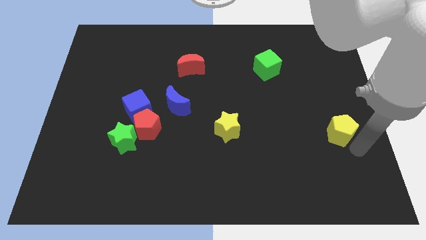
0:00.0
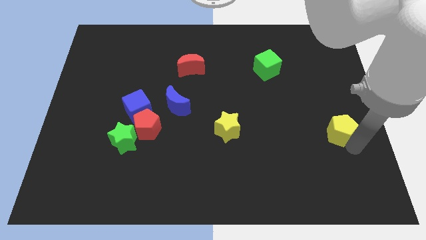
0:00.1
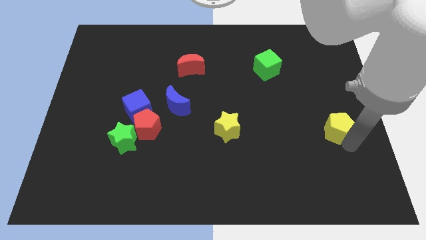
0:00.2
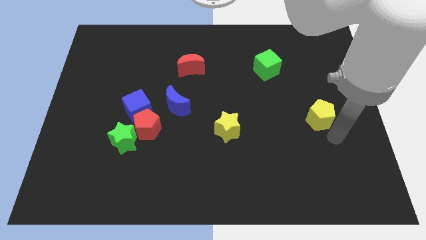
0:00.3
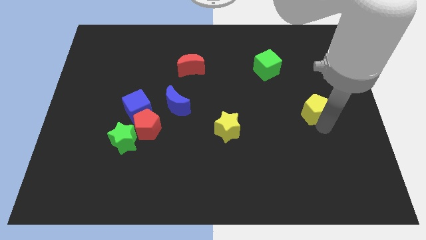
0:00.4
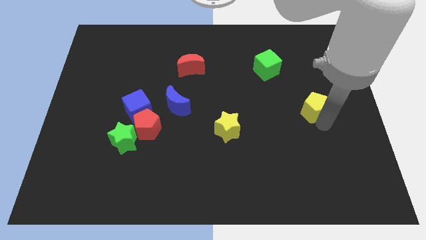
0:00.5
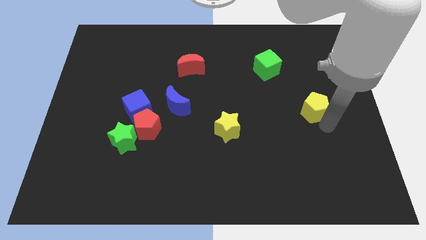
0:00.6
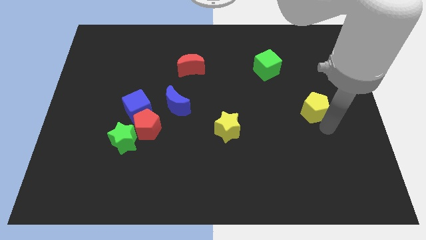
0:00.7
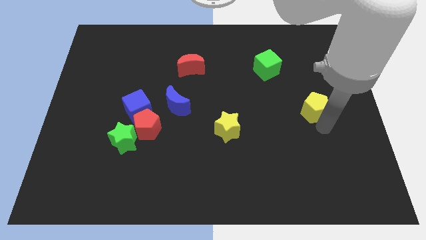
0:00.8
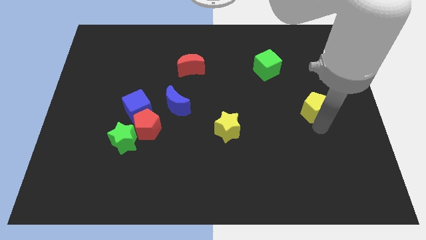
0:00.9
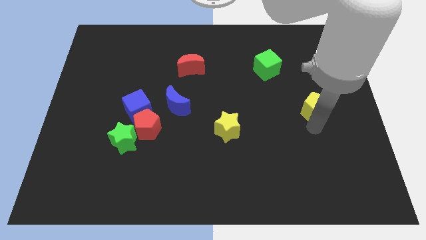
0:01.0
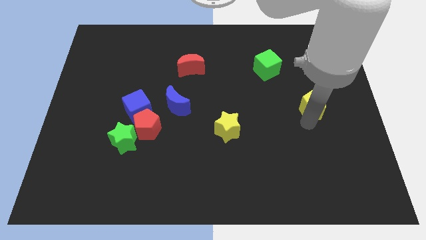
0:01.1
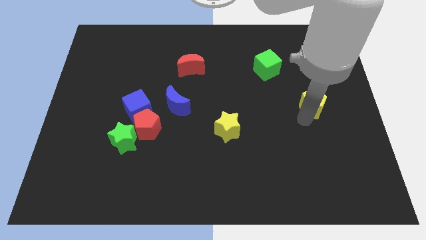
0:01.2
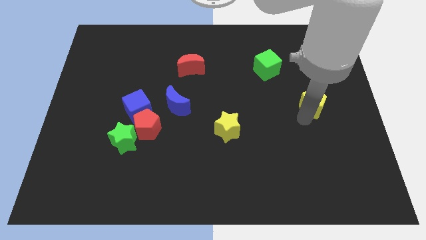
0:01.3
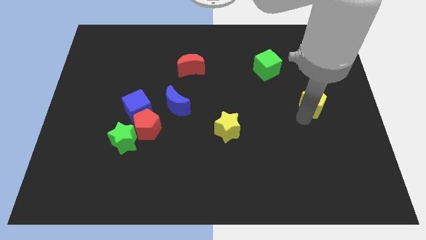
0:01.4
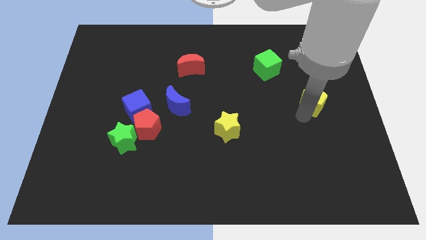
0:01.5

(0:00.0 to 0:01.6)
push the yellow pentagon slightly to the top of the board

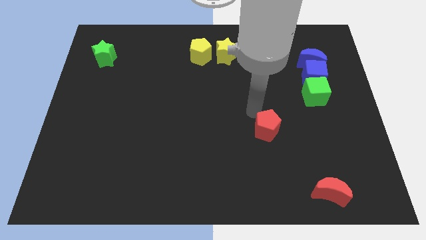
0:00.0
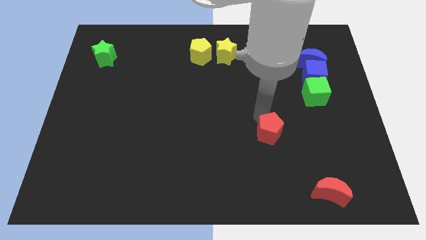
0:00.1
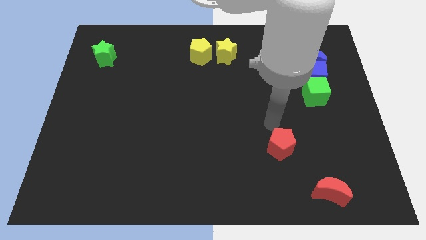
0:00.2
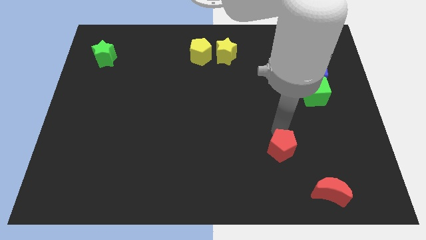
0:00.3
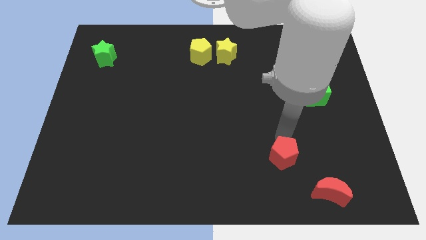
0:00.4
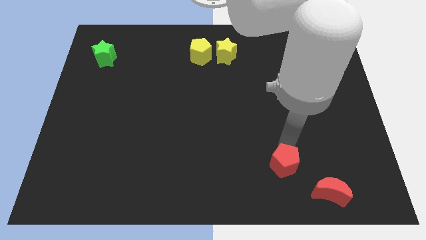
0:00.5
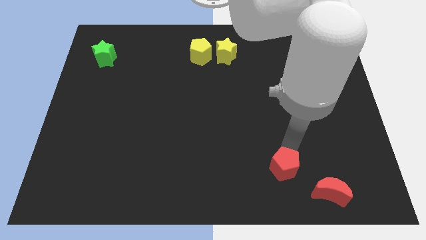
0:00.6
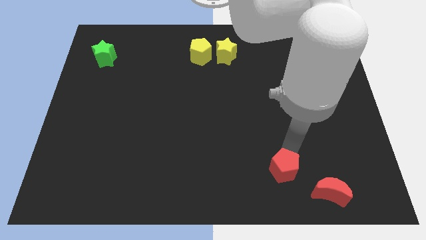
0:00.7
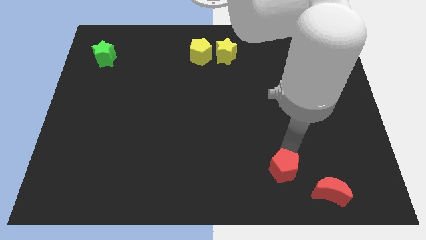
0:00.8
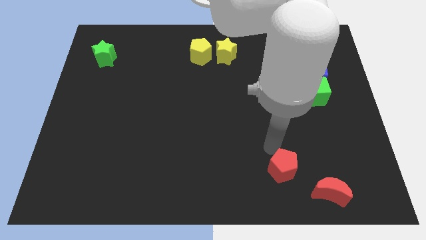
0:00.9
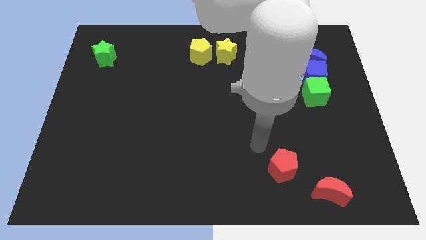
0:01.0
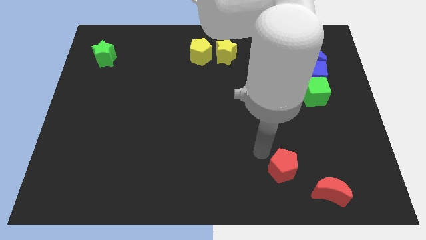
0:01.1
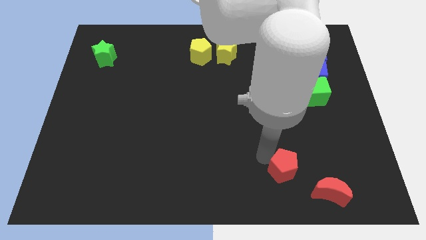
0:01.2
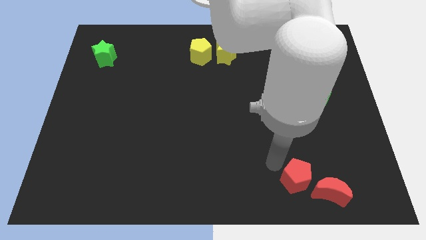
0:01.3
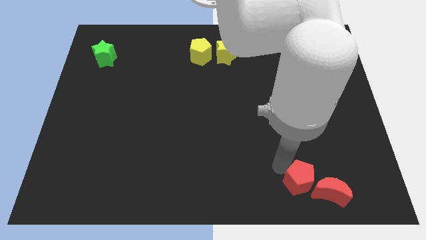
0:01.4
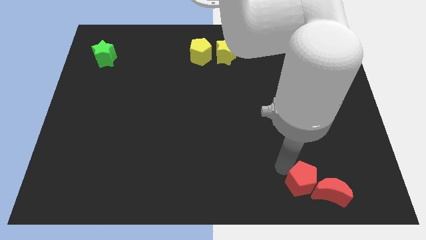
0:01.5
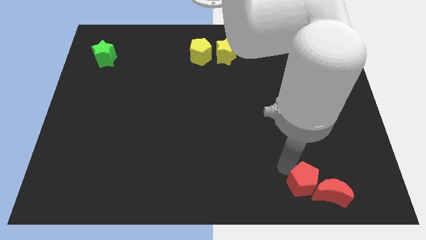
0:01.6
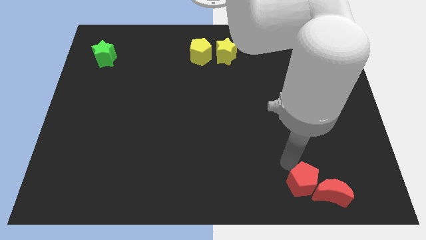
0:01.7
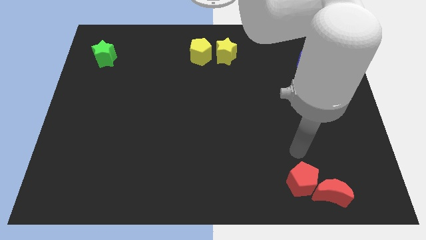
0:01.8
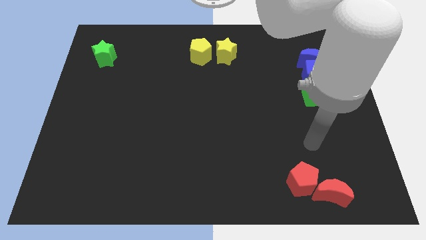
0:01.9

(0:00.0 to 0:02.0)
move the red pentagon close to the red crescent

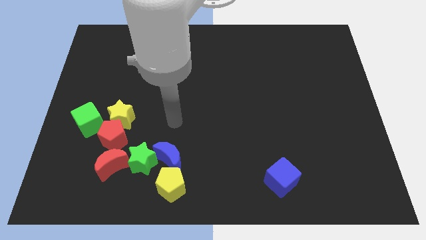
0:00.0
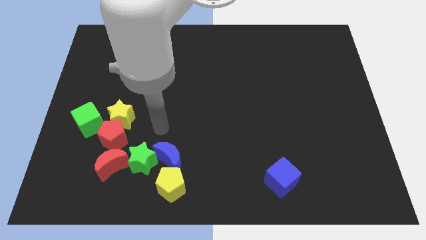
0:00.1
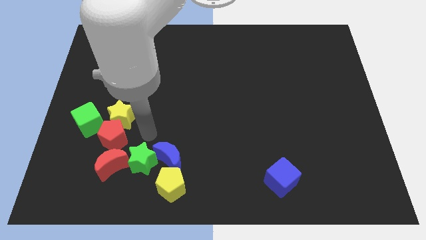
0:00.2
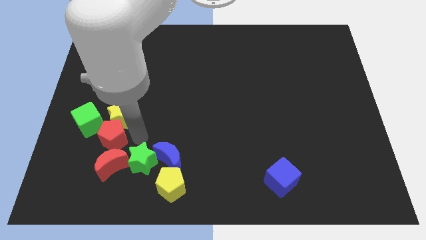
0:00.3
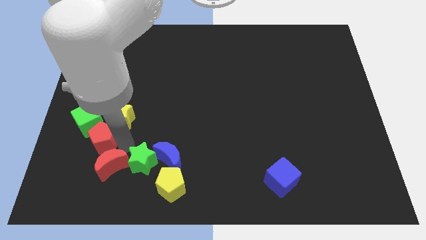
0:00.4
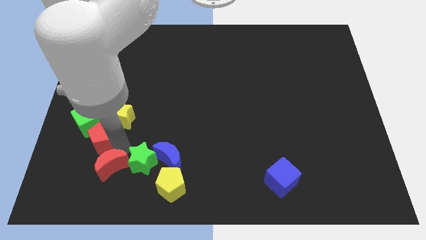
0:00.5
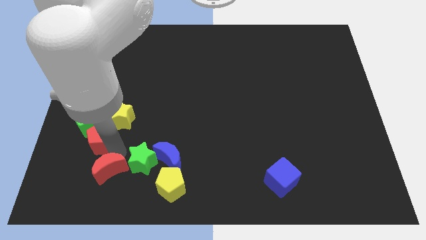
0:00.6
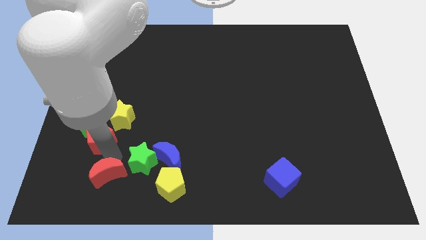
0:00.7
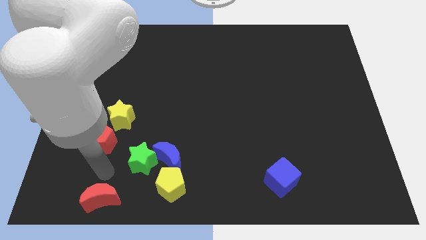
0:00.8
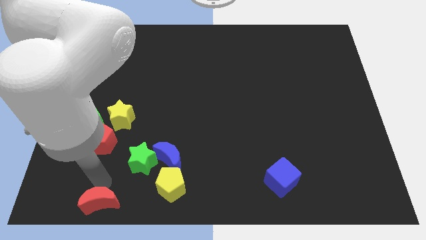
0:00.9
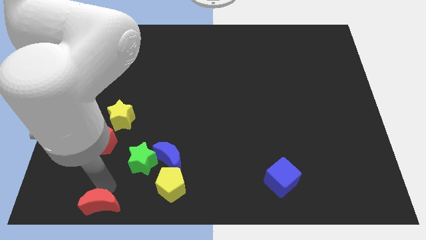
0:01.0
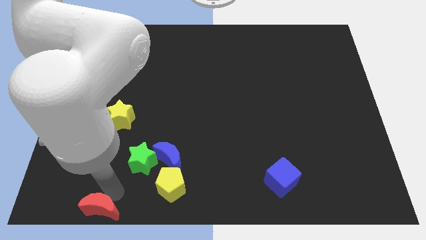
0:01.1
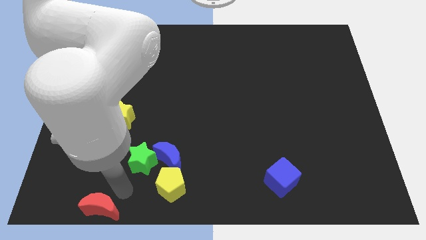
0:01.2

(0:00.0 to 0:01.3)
separate red crescent from the red pentagon

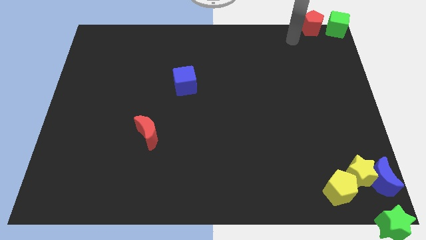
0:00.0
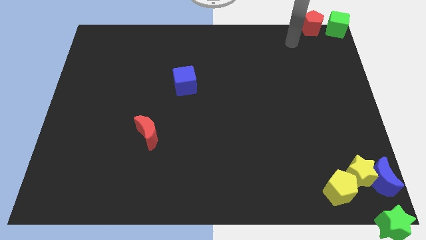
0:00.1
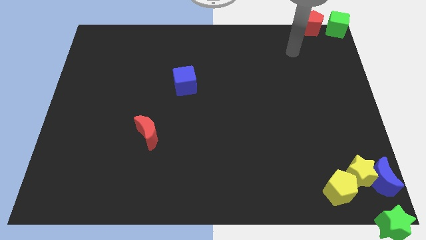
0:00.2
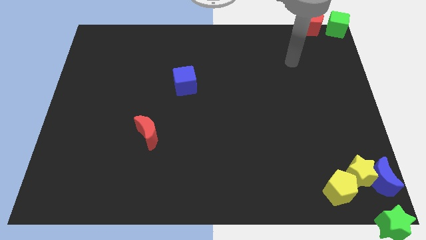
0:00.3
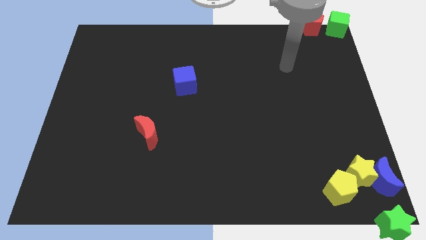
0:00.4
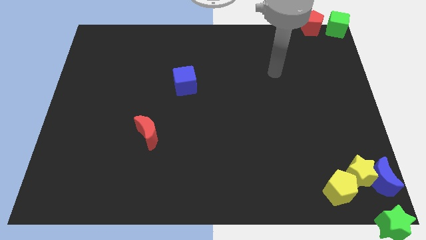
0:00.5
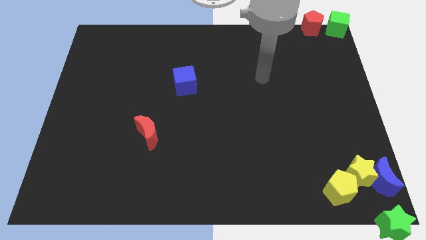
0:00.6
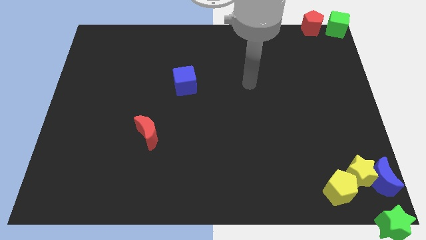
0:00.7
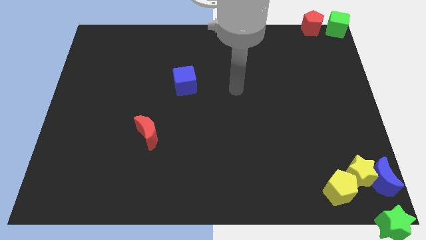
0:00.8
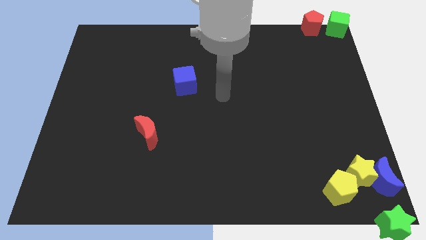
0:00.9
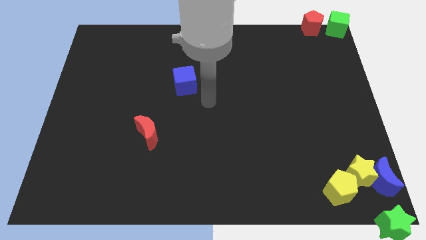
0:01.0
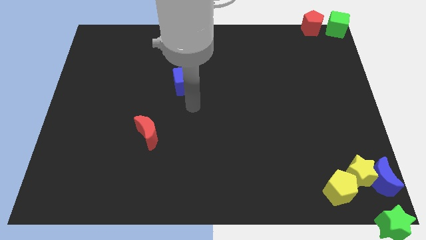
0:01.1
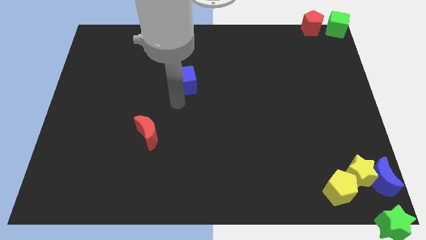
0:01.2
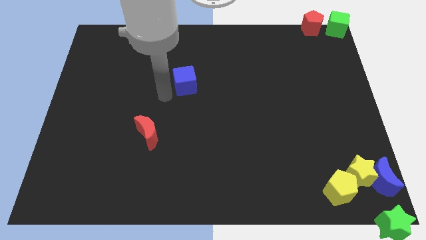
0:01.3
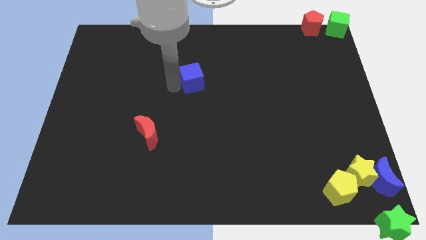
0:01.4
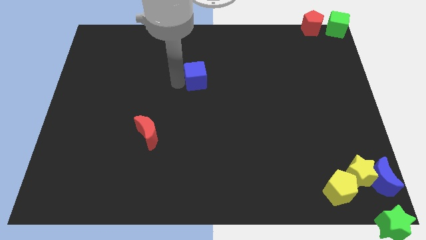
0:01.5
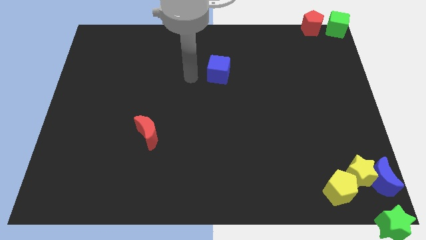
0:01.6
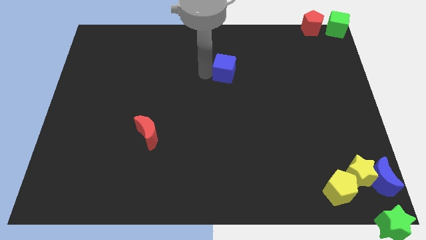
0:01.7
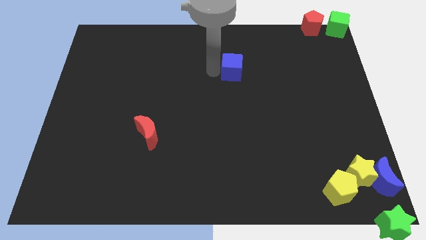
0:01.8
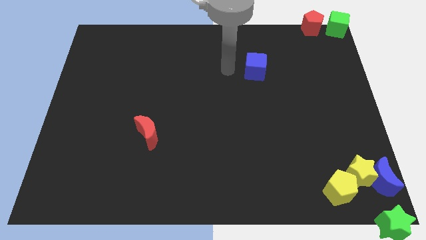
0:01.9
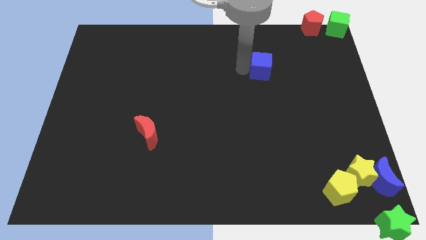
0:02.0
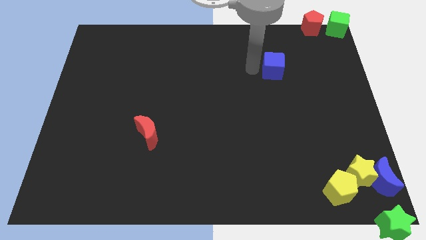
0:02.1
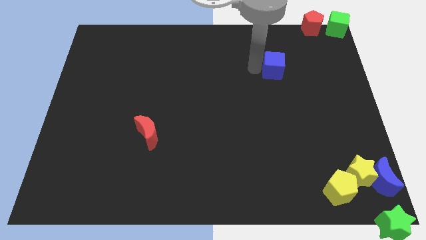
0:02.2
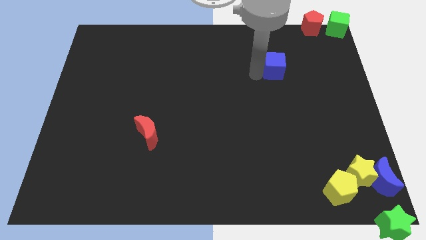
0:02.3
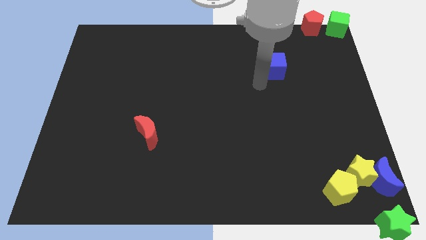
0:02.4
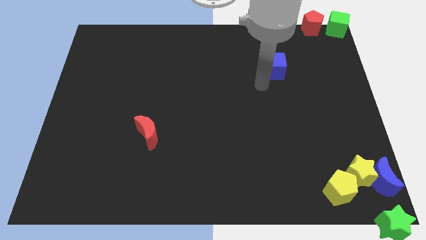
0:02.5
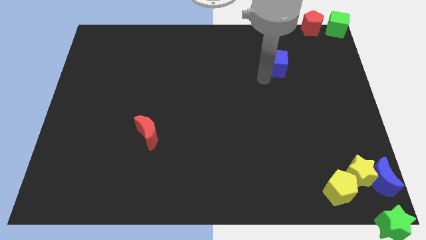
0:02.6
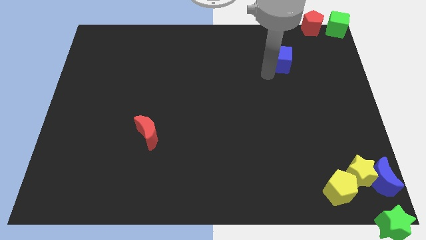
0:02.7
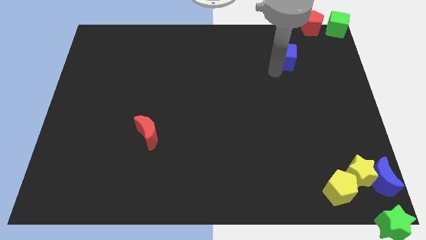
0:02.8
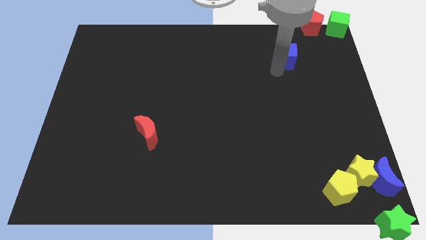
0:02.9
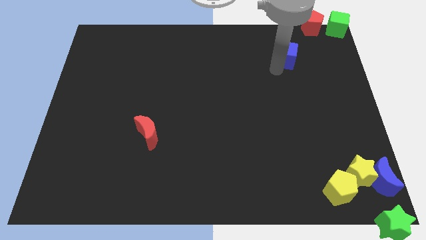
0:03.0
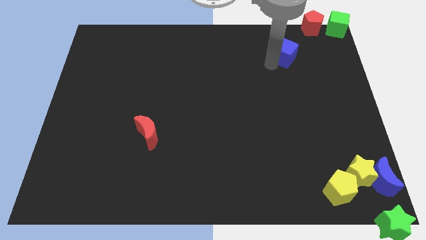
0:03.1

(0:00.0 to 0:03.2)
drag the blue cube towards the red pentagon

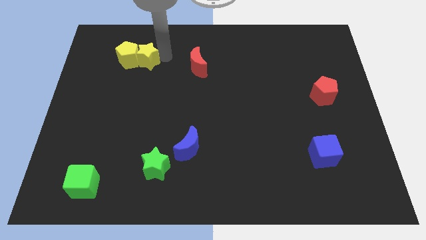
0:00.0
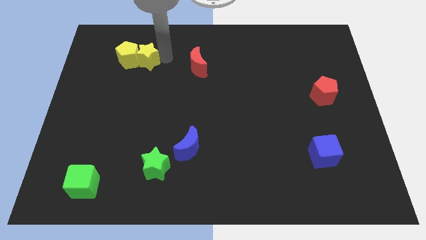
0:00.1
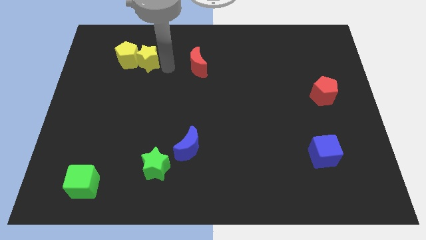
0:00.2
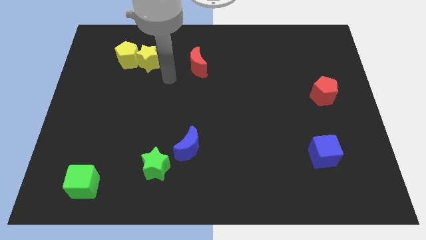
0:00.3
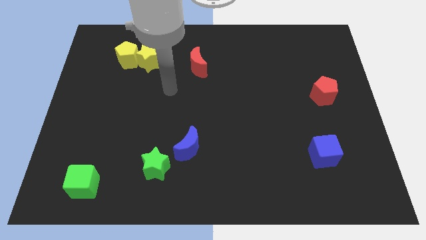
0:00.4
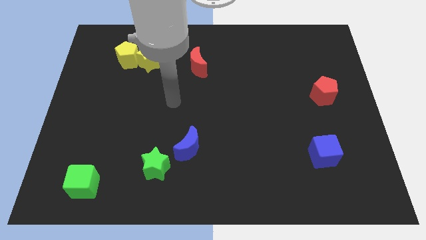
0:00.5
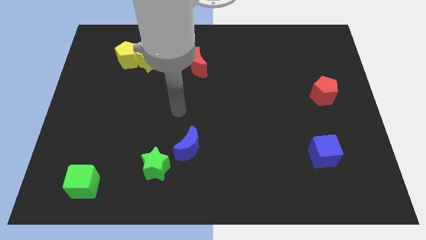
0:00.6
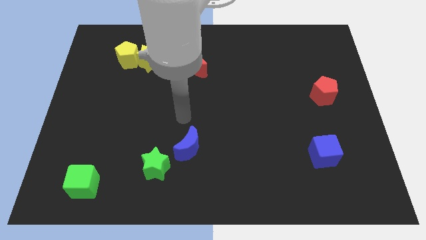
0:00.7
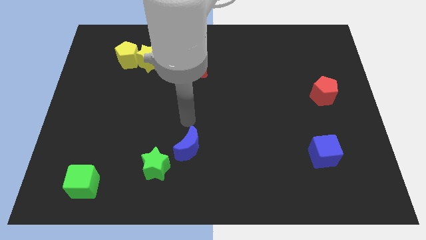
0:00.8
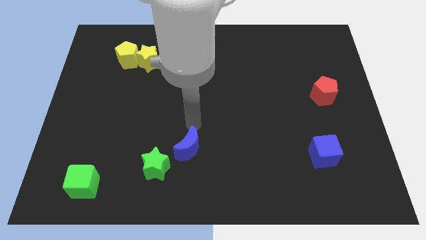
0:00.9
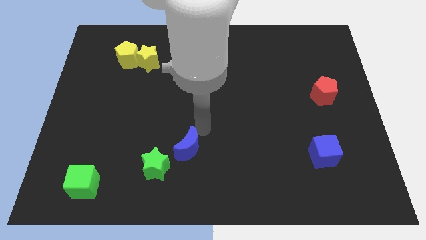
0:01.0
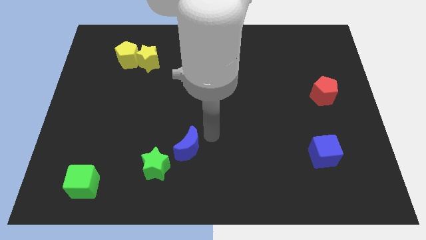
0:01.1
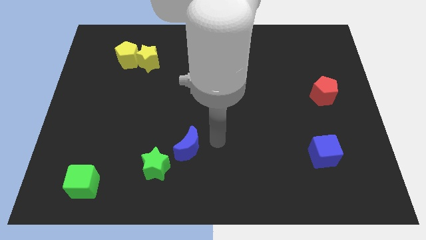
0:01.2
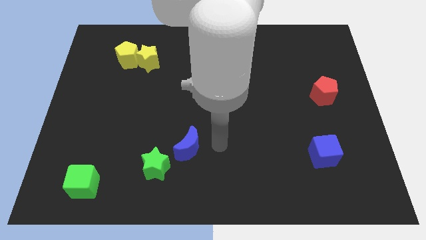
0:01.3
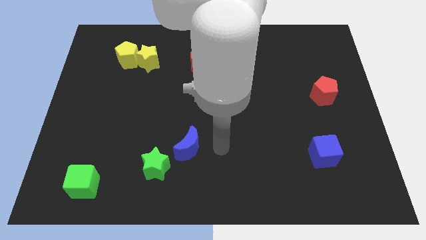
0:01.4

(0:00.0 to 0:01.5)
move arm right to the blue moon
